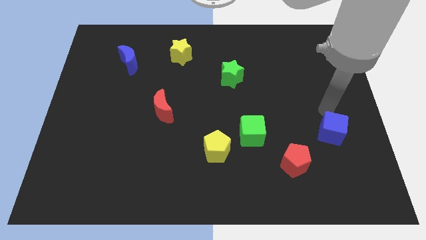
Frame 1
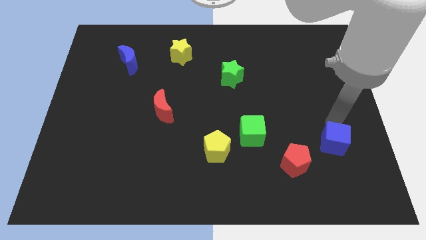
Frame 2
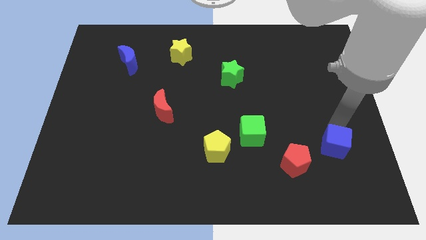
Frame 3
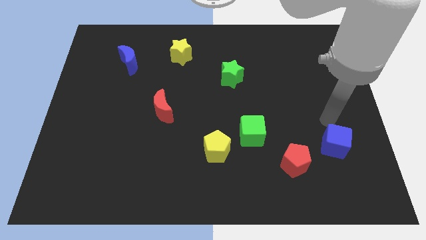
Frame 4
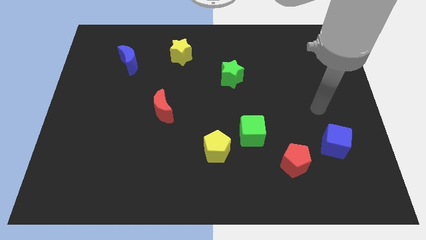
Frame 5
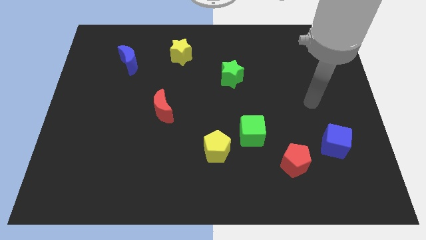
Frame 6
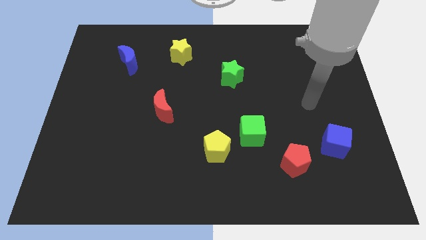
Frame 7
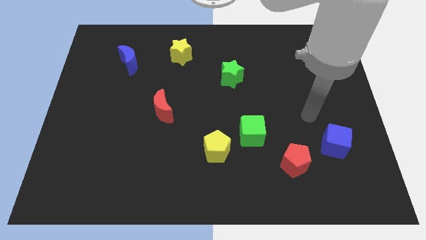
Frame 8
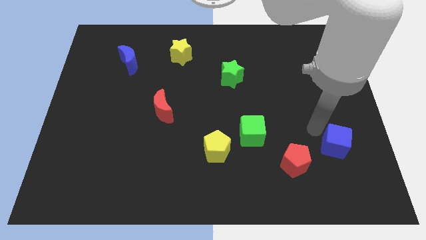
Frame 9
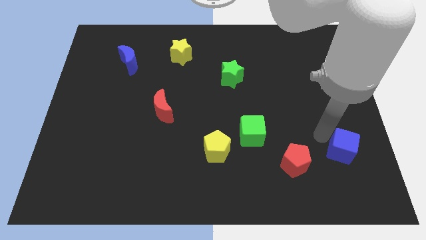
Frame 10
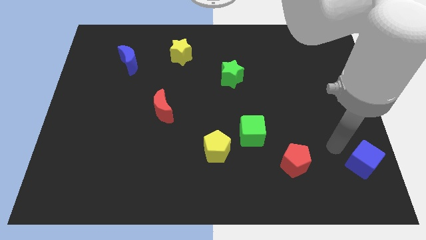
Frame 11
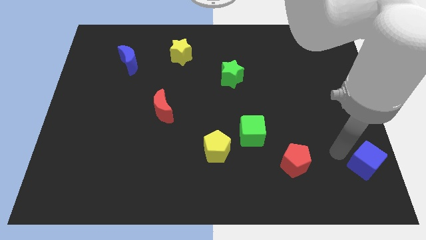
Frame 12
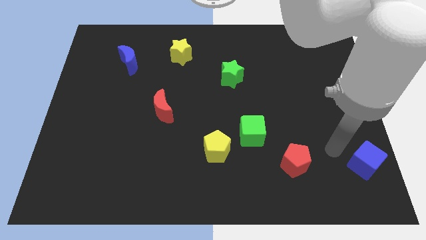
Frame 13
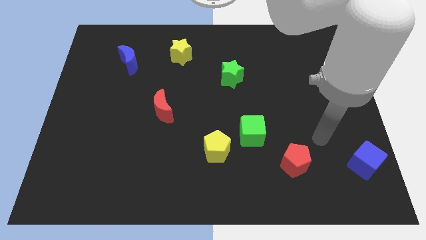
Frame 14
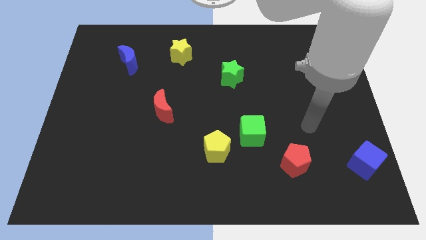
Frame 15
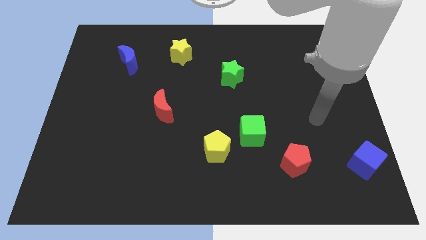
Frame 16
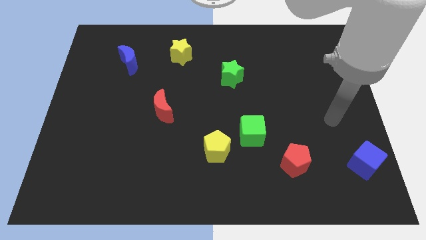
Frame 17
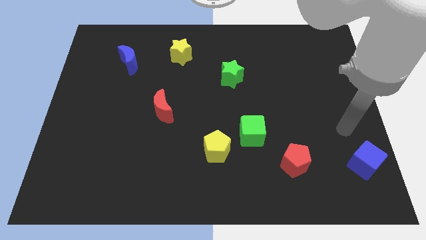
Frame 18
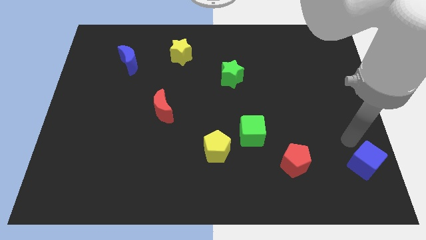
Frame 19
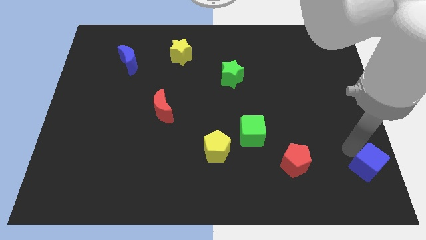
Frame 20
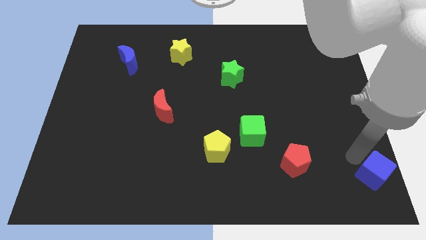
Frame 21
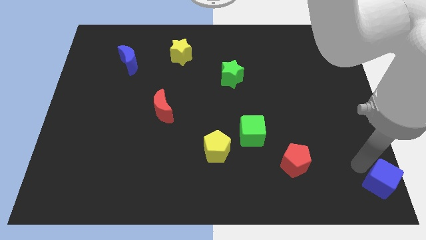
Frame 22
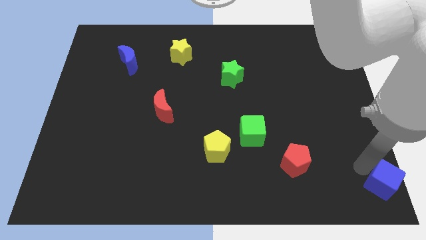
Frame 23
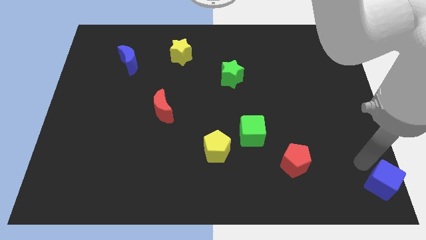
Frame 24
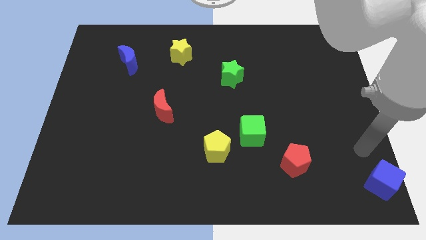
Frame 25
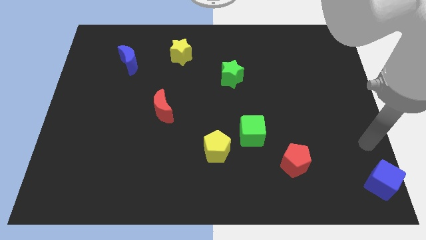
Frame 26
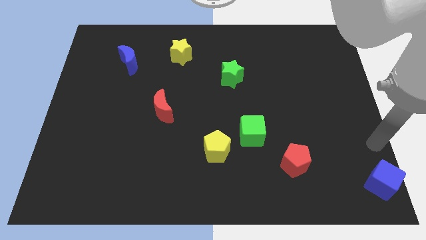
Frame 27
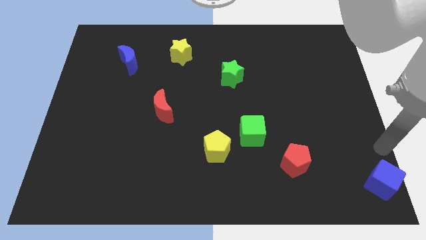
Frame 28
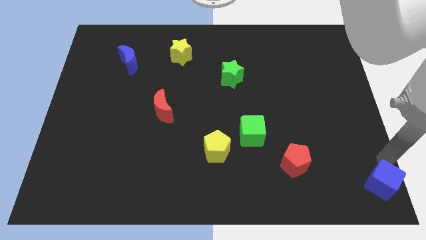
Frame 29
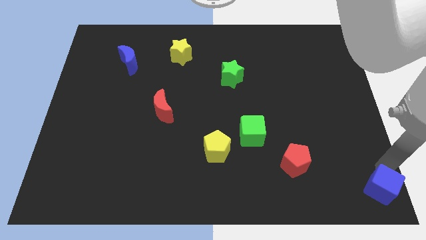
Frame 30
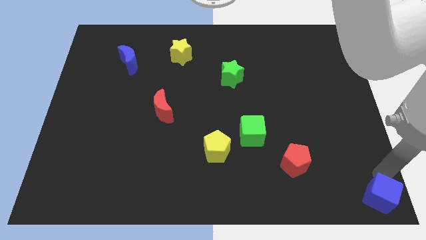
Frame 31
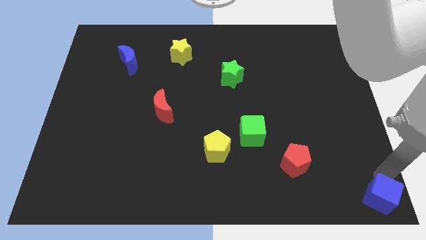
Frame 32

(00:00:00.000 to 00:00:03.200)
drag the blue cube to bottom right corner of the board

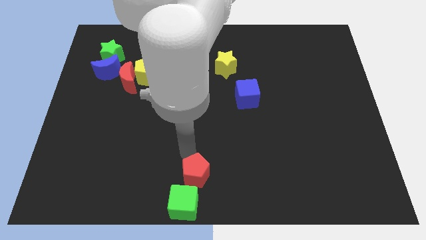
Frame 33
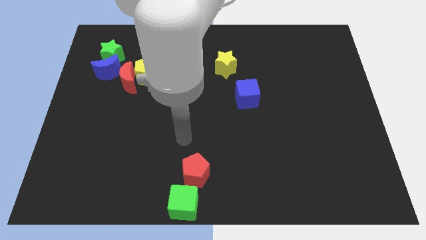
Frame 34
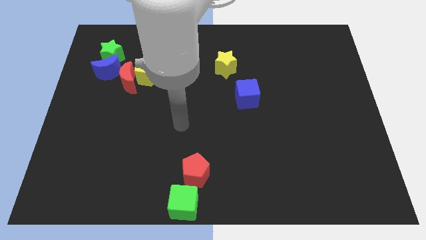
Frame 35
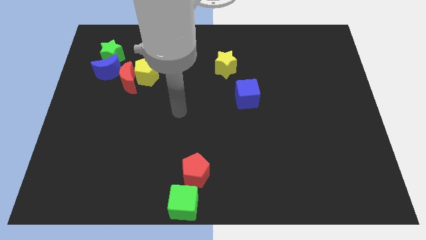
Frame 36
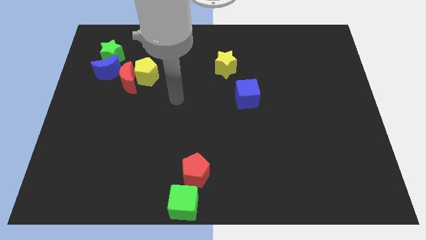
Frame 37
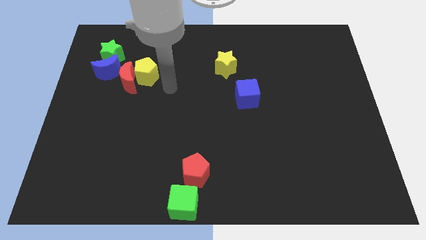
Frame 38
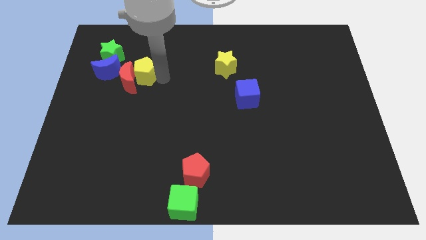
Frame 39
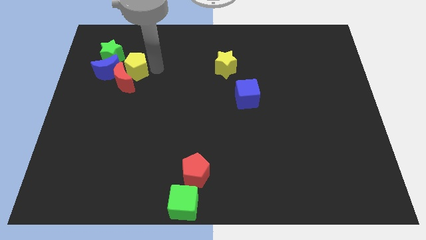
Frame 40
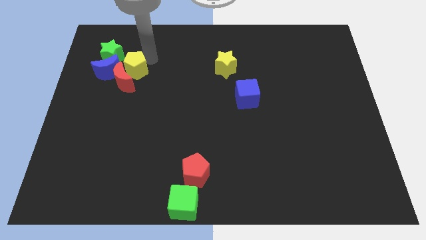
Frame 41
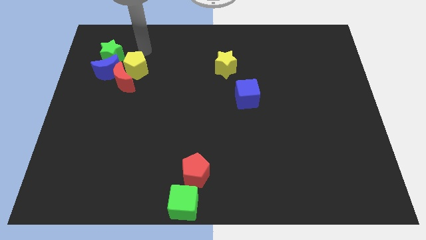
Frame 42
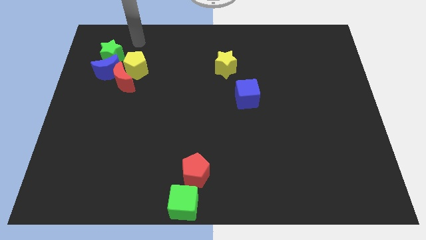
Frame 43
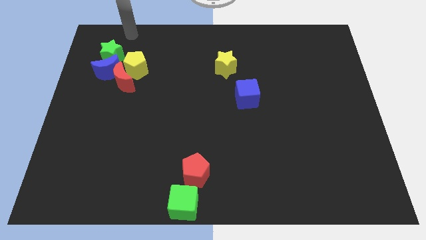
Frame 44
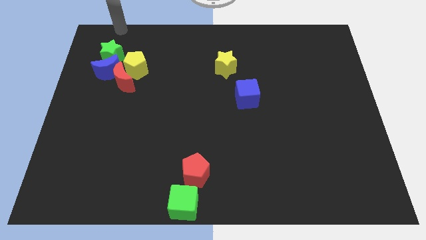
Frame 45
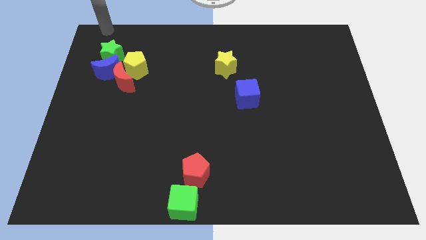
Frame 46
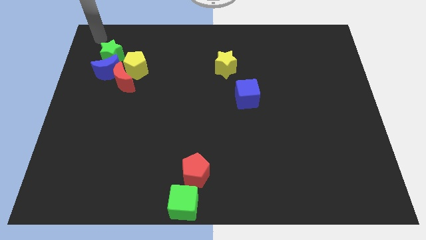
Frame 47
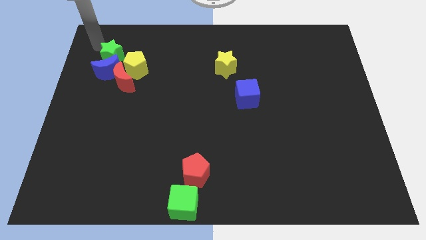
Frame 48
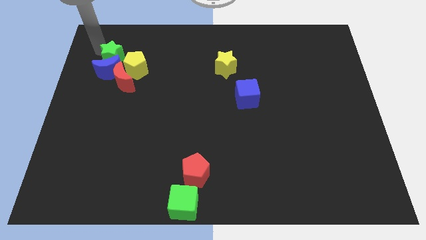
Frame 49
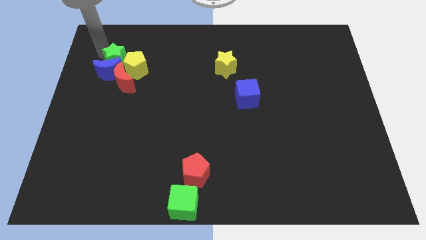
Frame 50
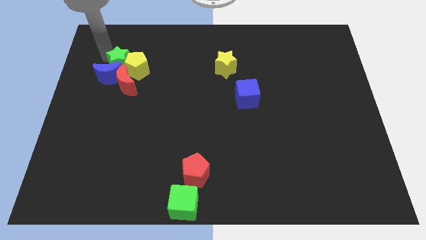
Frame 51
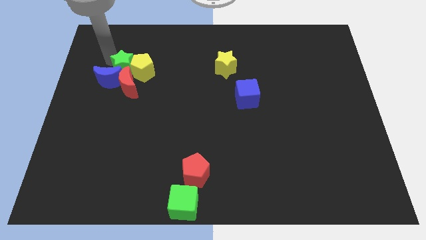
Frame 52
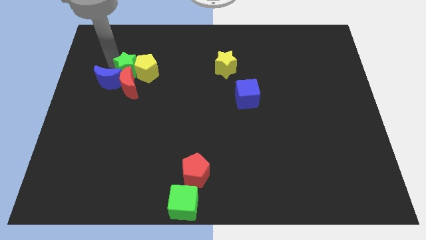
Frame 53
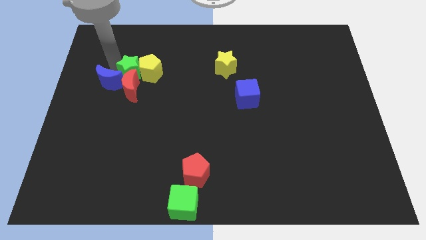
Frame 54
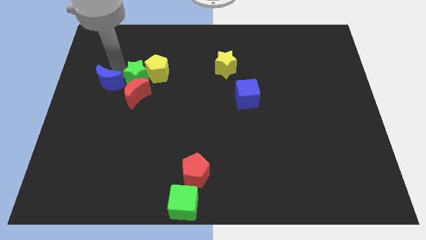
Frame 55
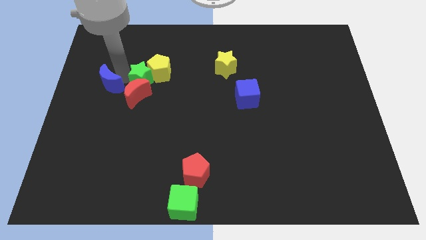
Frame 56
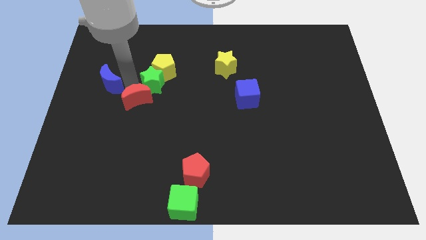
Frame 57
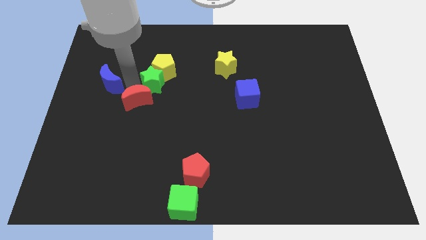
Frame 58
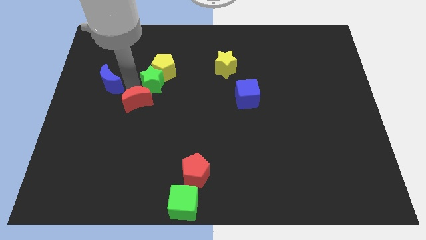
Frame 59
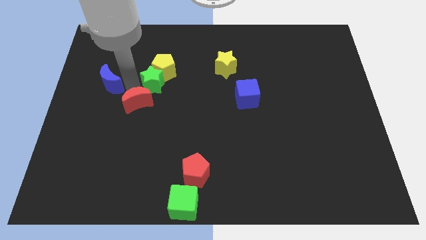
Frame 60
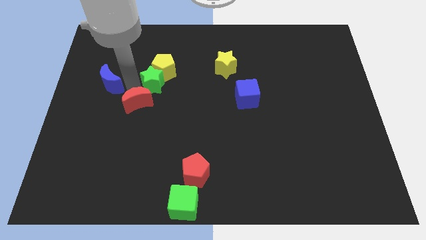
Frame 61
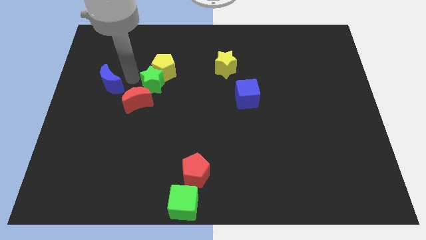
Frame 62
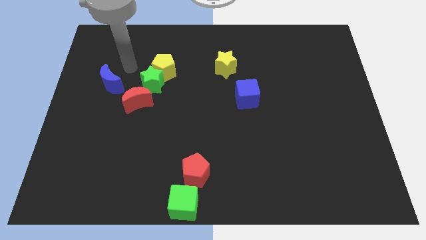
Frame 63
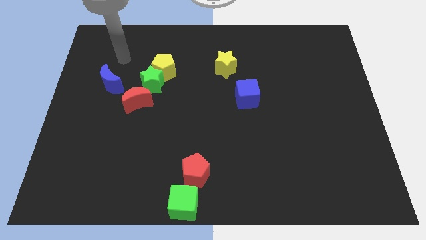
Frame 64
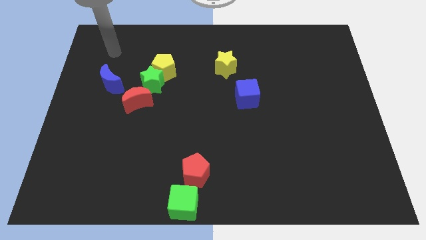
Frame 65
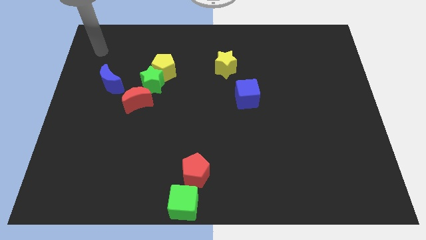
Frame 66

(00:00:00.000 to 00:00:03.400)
make a diagonal line out of green star yellow pentagon and the red moon

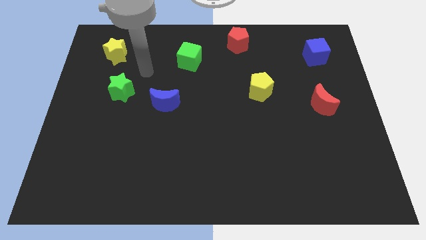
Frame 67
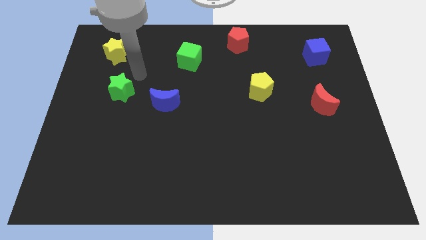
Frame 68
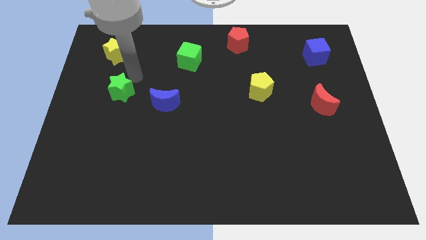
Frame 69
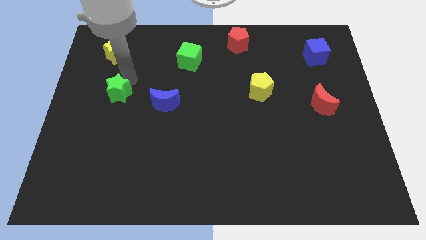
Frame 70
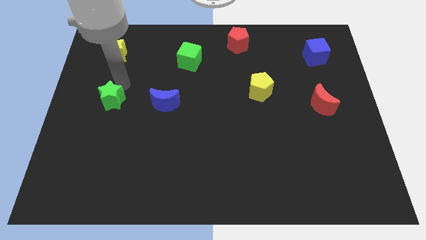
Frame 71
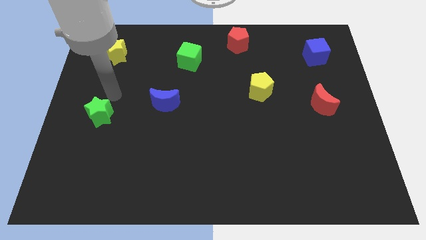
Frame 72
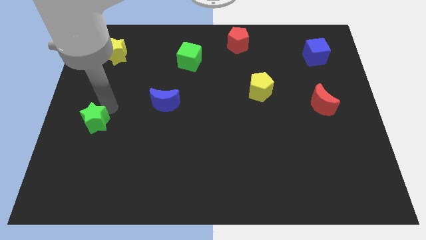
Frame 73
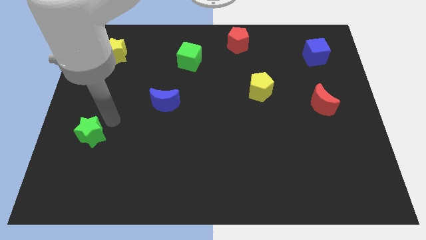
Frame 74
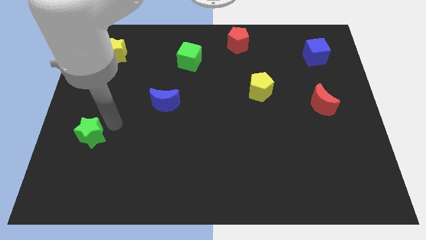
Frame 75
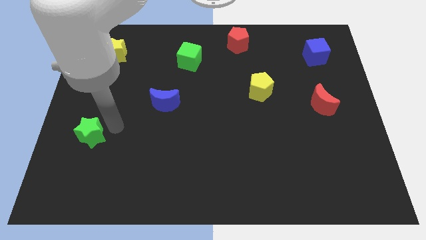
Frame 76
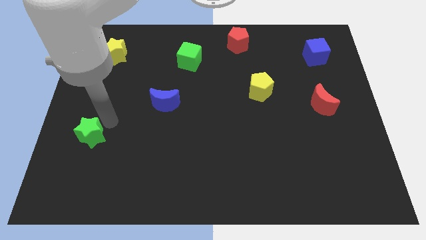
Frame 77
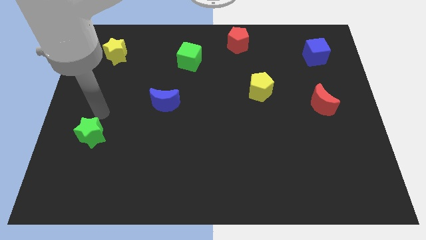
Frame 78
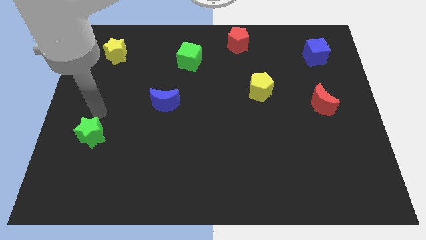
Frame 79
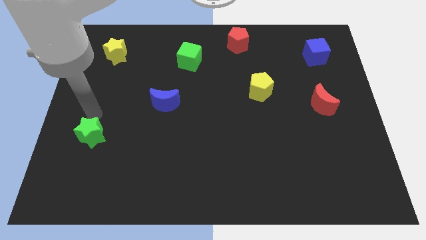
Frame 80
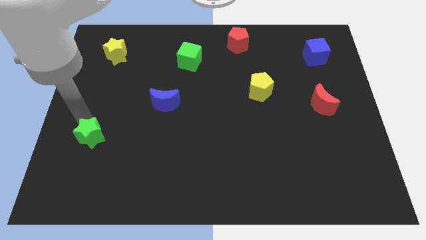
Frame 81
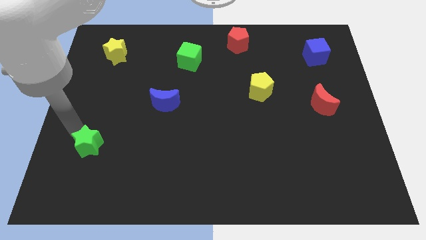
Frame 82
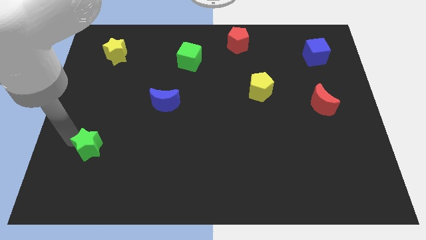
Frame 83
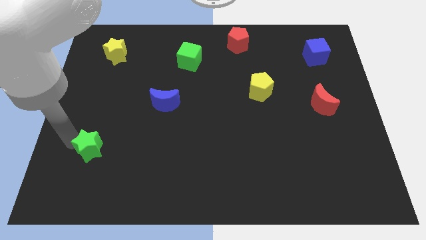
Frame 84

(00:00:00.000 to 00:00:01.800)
place the green star diagonally on the bottom left side of the blue moon

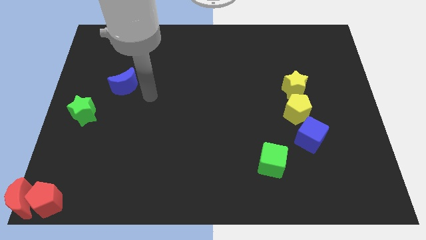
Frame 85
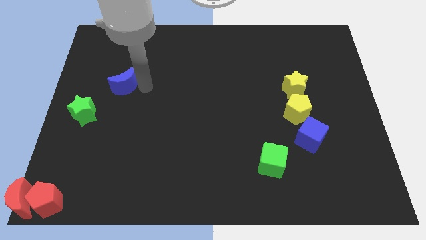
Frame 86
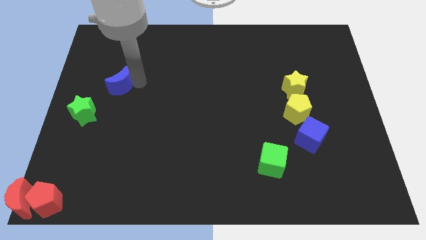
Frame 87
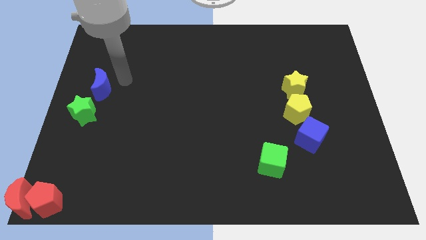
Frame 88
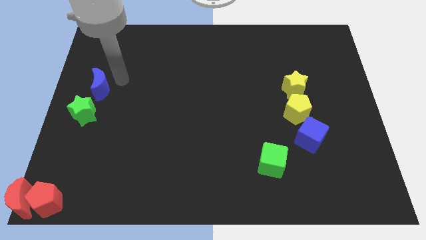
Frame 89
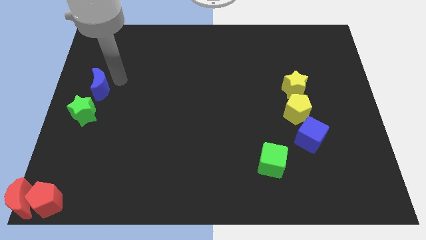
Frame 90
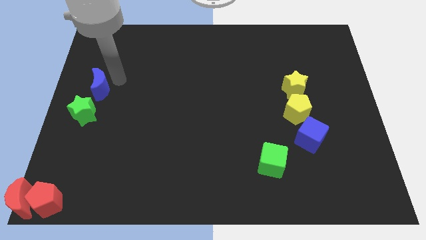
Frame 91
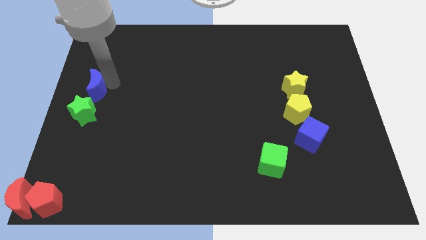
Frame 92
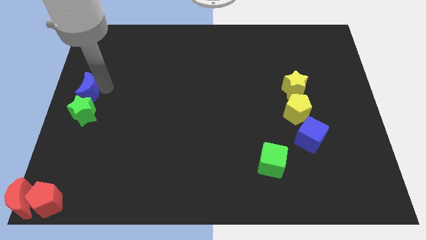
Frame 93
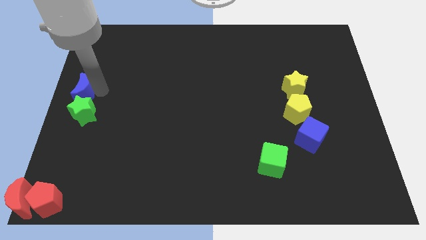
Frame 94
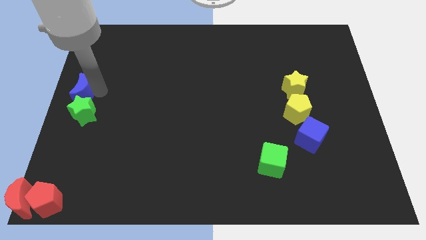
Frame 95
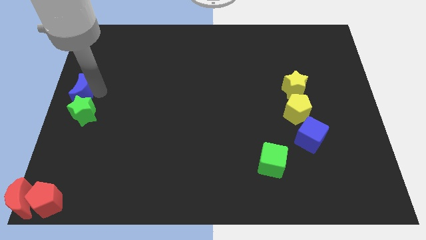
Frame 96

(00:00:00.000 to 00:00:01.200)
push the blue crescent on the top of green star
